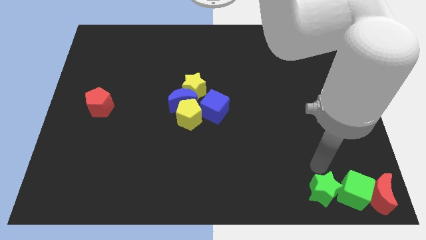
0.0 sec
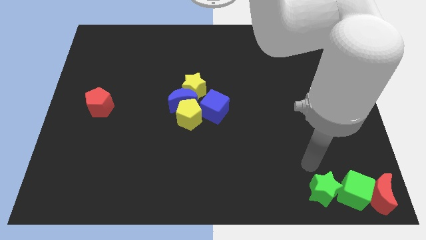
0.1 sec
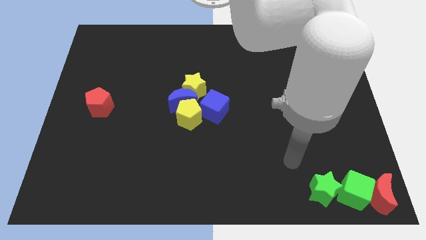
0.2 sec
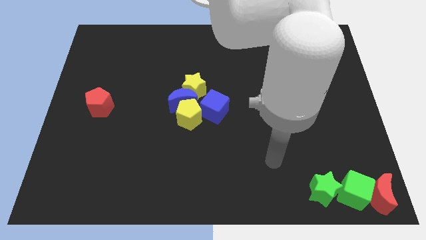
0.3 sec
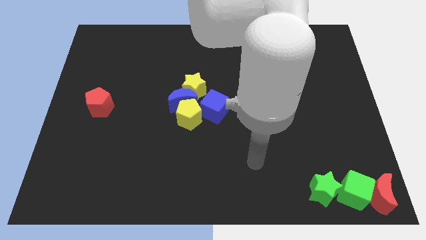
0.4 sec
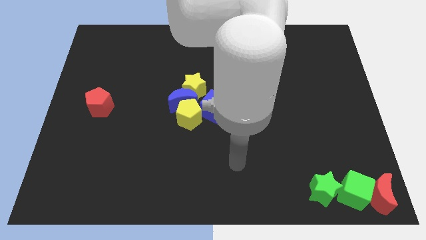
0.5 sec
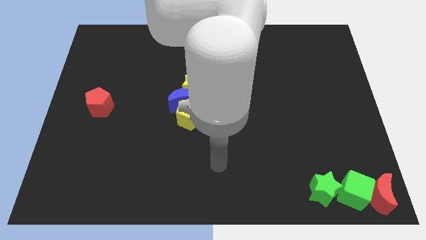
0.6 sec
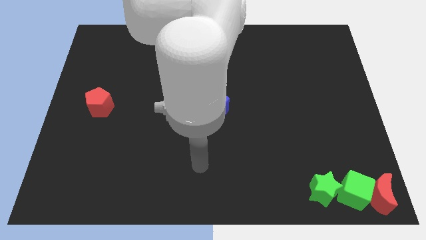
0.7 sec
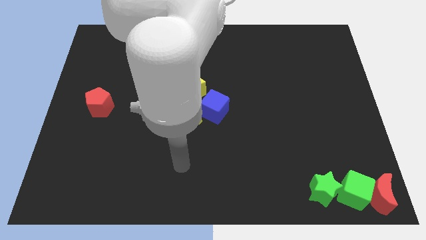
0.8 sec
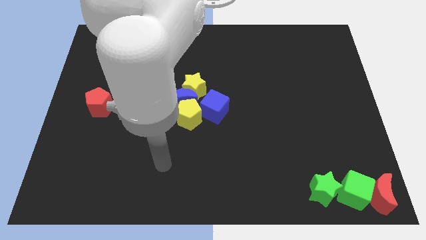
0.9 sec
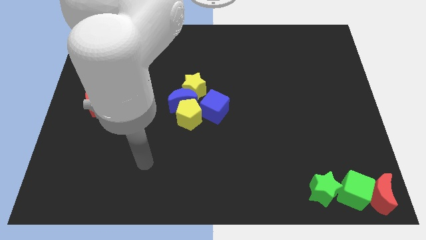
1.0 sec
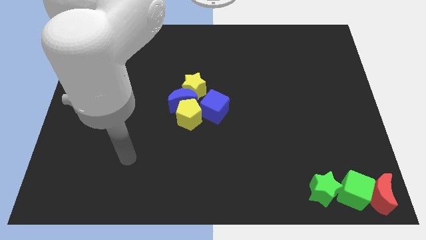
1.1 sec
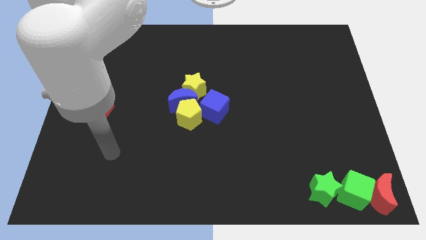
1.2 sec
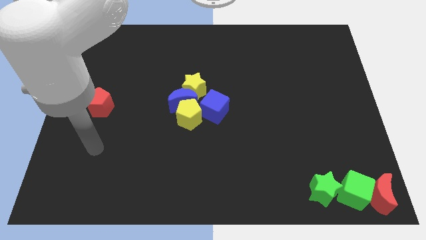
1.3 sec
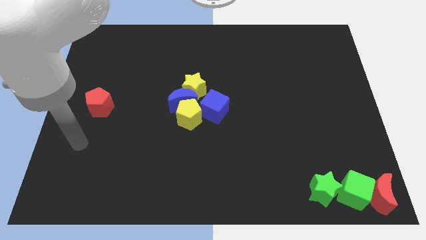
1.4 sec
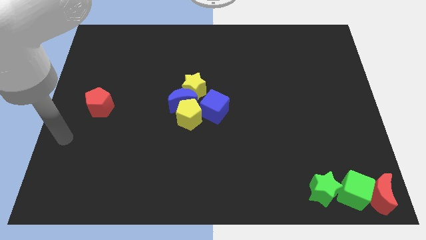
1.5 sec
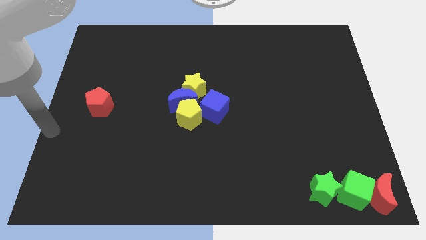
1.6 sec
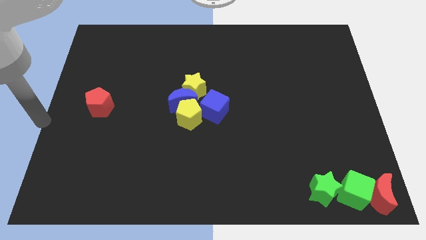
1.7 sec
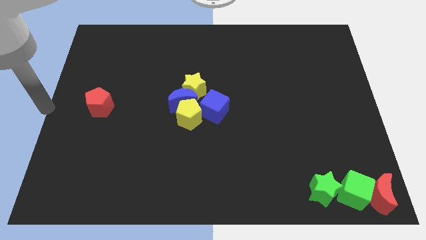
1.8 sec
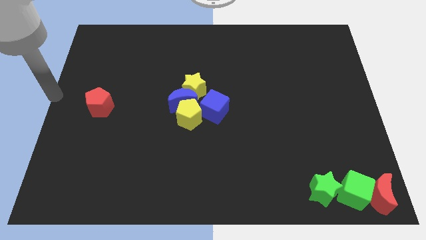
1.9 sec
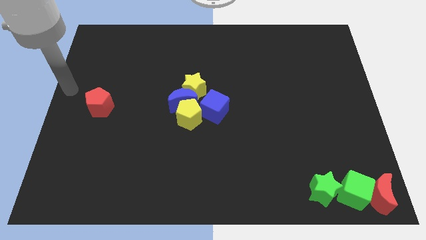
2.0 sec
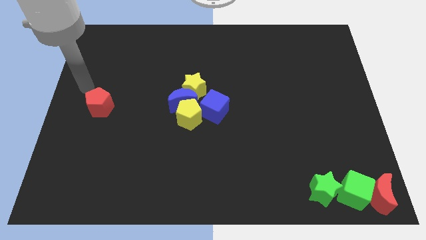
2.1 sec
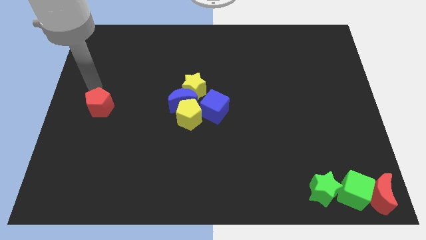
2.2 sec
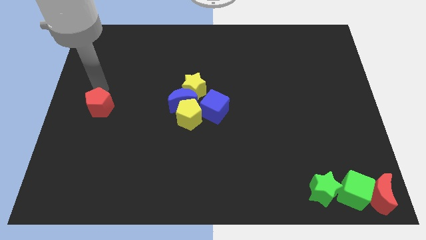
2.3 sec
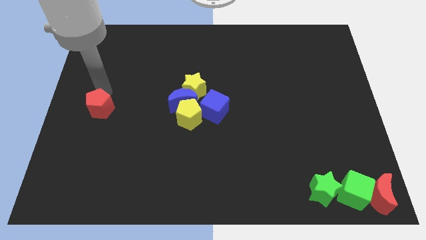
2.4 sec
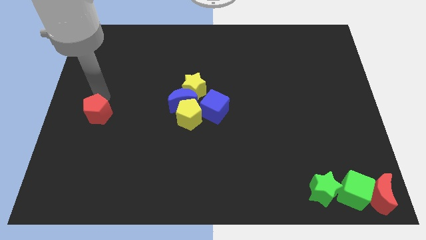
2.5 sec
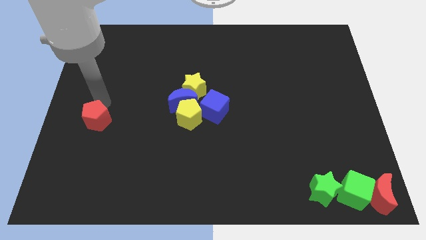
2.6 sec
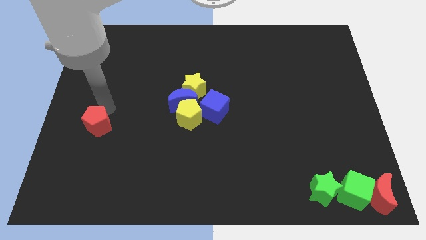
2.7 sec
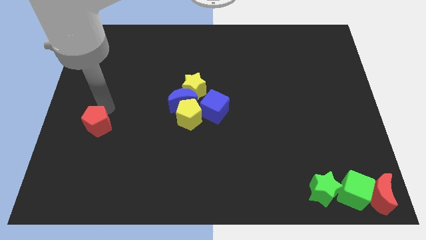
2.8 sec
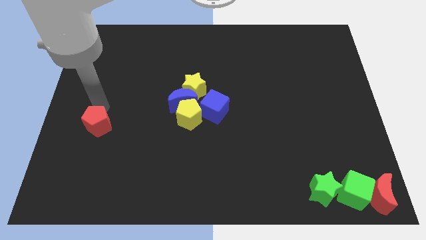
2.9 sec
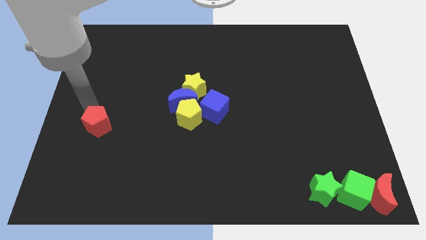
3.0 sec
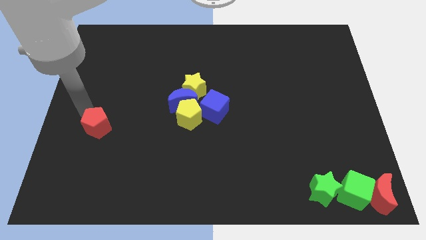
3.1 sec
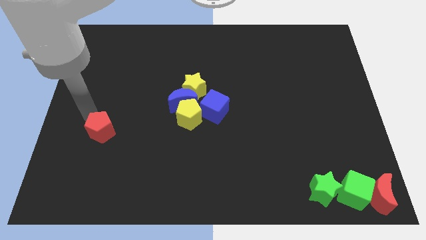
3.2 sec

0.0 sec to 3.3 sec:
push the red pentagon to the left of the yellow pentagon

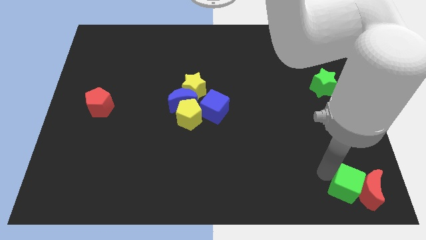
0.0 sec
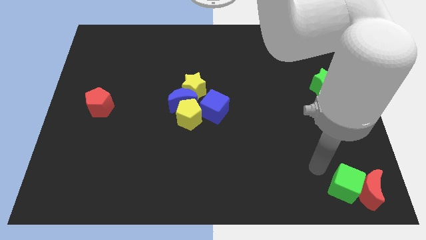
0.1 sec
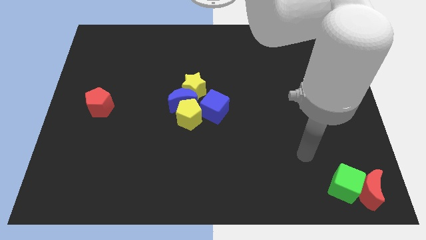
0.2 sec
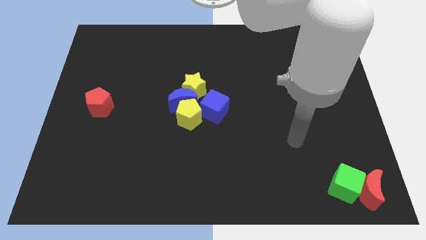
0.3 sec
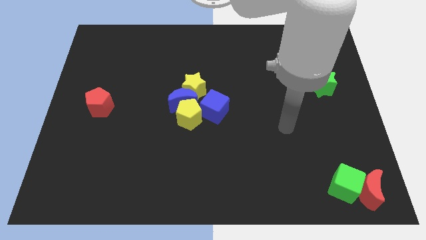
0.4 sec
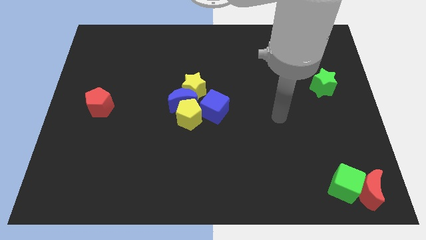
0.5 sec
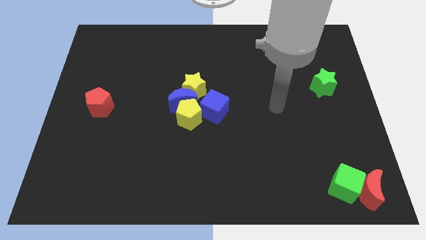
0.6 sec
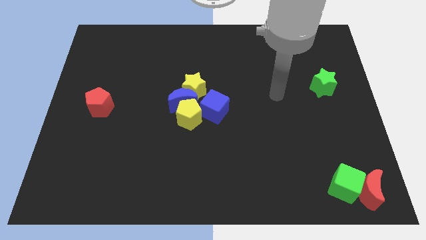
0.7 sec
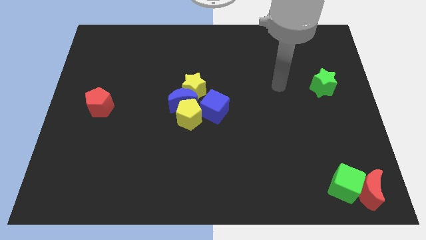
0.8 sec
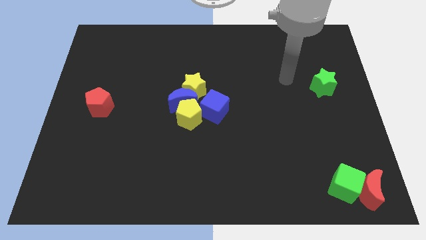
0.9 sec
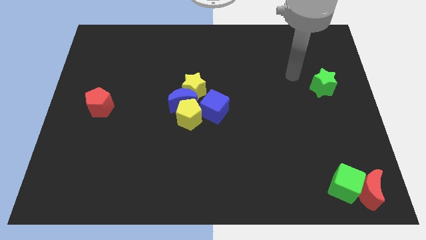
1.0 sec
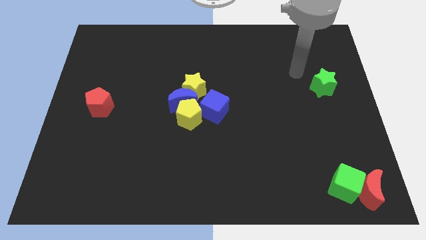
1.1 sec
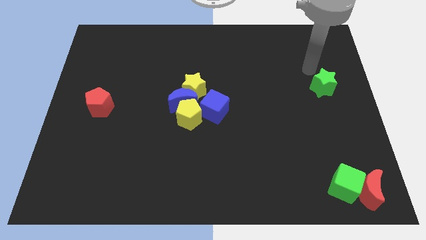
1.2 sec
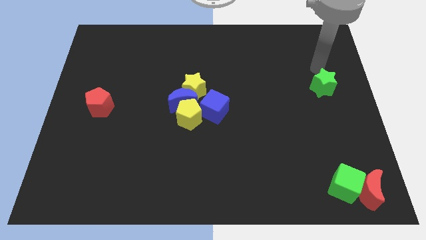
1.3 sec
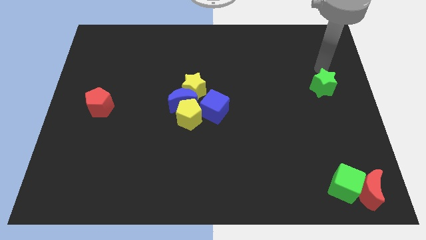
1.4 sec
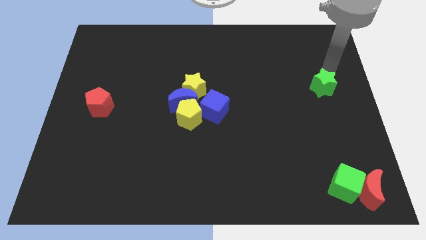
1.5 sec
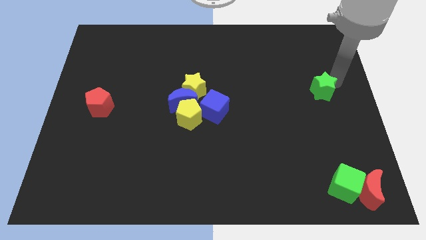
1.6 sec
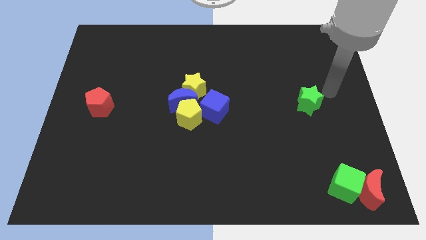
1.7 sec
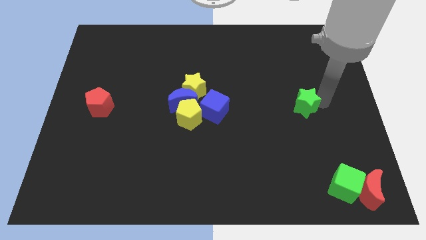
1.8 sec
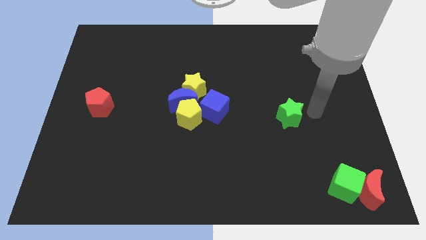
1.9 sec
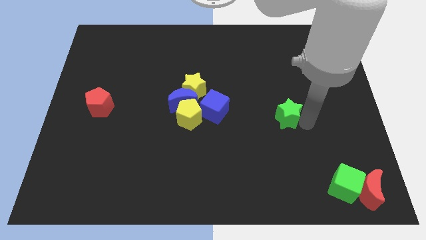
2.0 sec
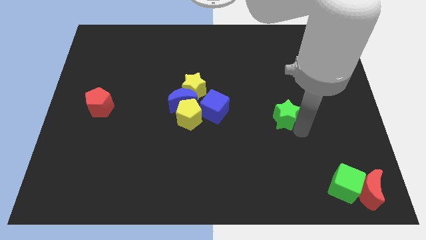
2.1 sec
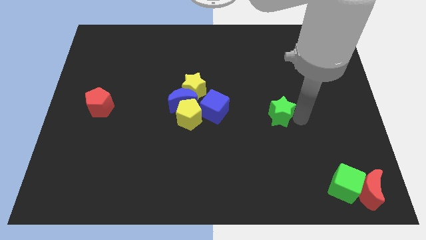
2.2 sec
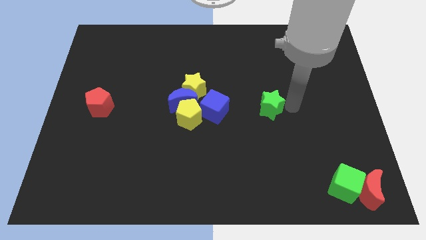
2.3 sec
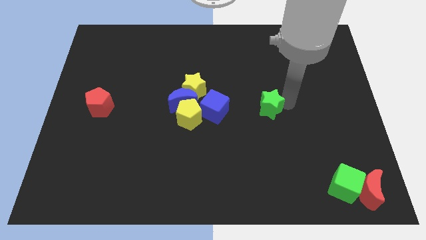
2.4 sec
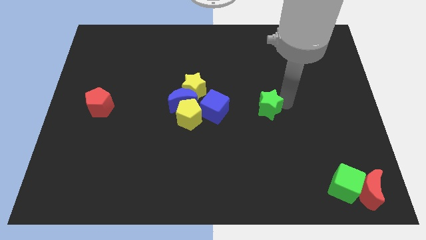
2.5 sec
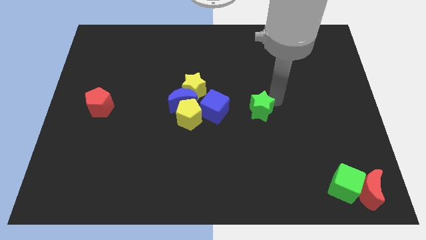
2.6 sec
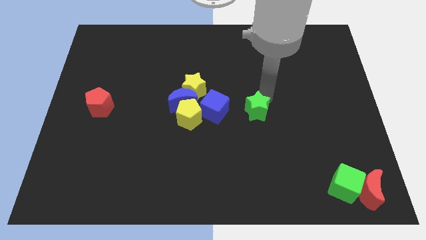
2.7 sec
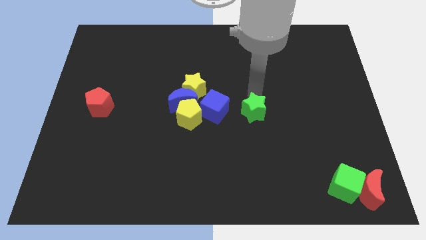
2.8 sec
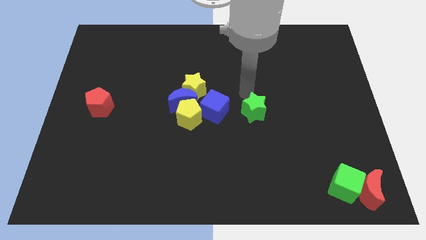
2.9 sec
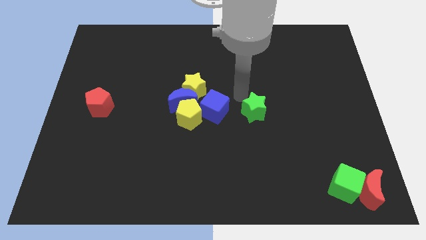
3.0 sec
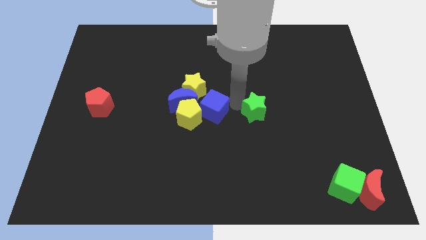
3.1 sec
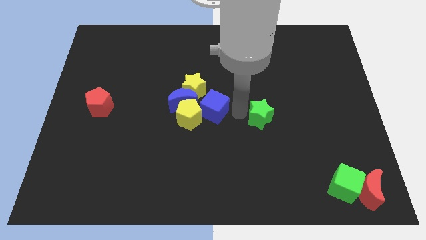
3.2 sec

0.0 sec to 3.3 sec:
move the green star to the right of the blue cube

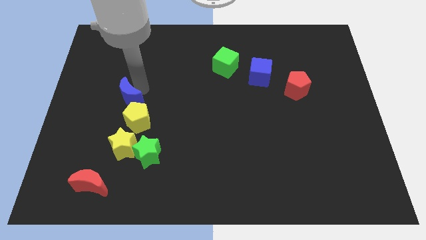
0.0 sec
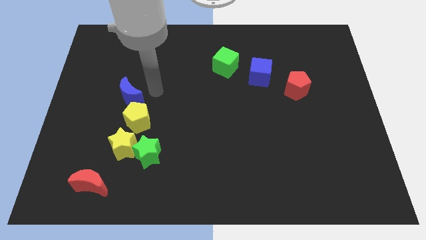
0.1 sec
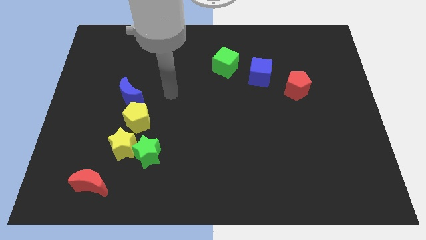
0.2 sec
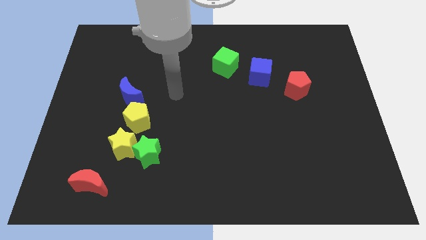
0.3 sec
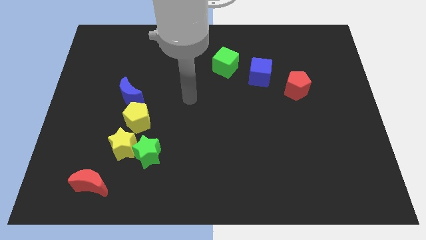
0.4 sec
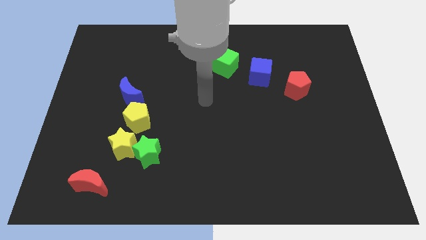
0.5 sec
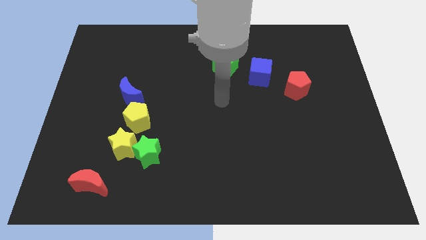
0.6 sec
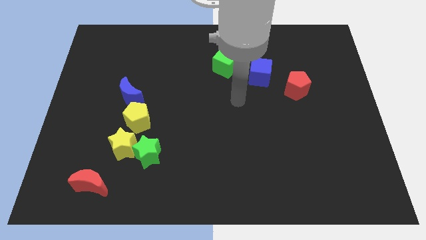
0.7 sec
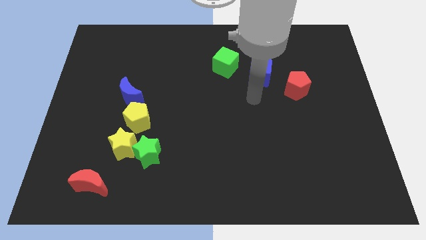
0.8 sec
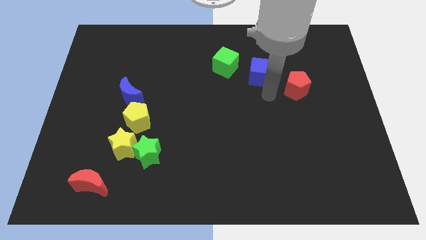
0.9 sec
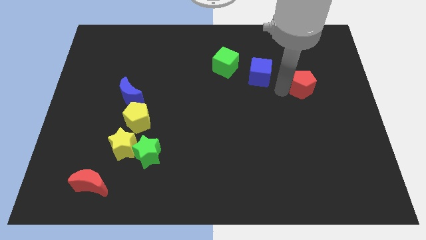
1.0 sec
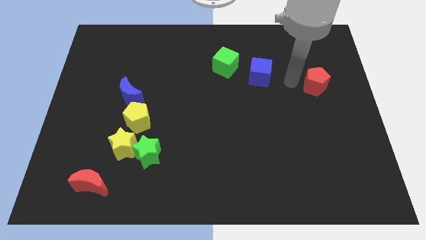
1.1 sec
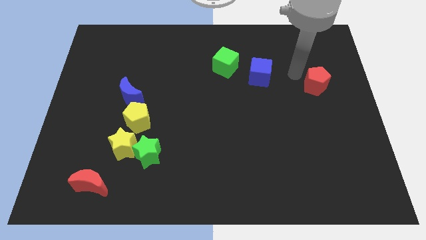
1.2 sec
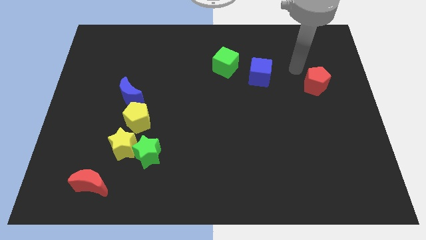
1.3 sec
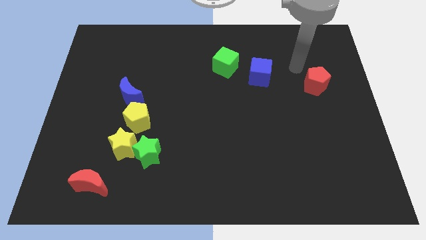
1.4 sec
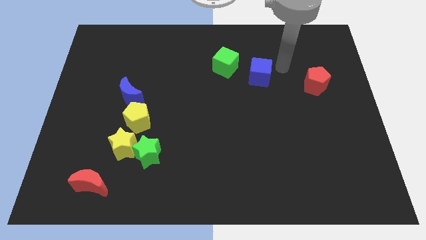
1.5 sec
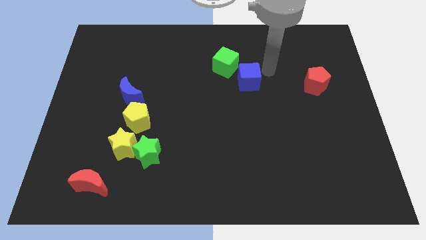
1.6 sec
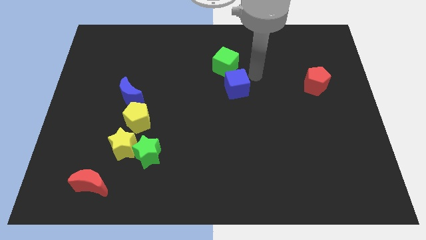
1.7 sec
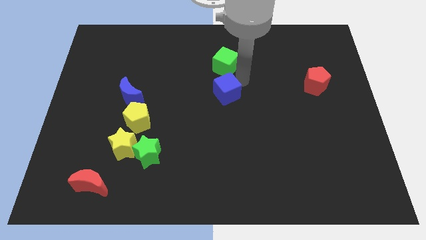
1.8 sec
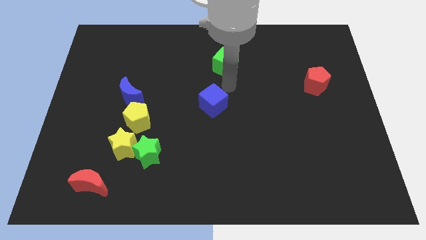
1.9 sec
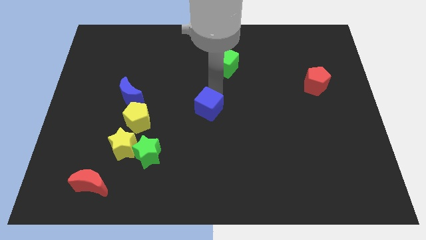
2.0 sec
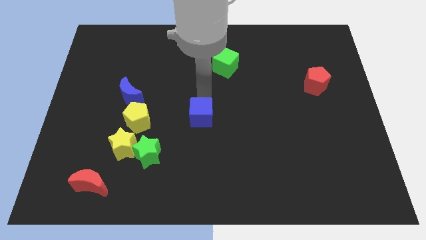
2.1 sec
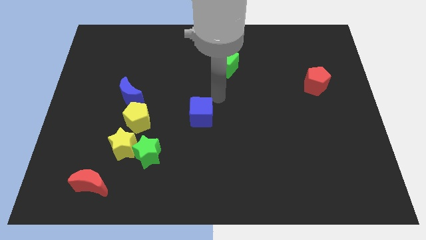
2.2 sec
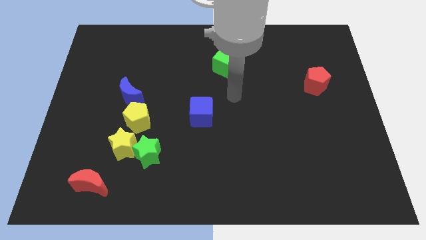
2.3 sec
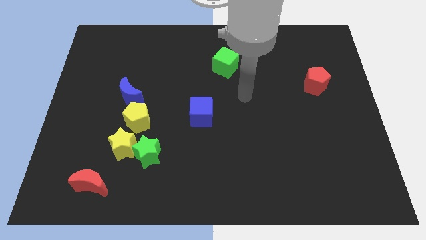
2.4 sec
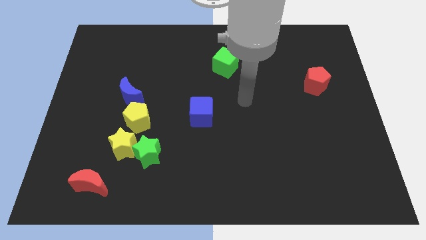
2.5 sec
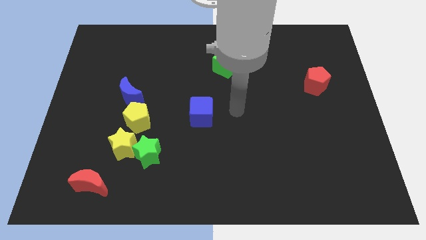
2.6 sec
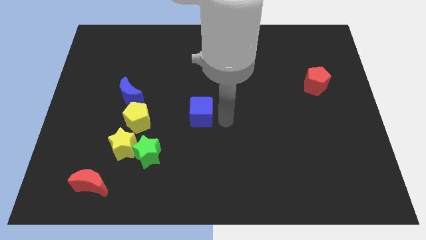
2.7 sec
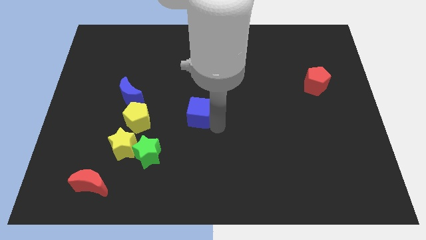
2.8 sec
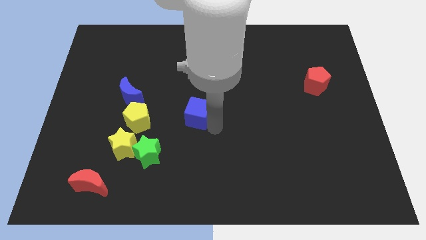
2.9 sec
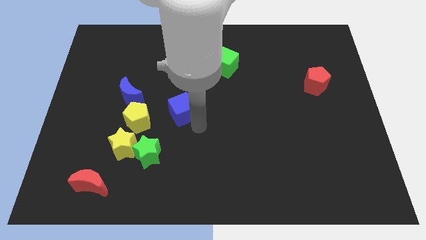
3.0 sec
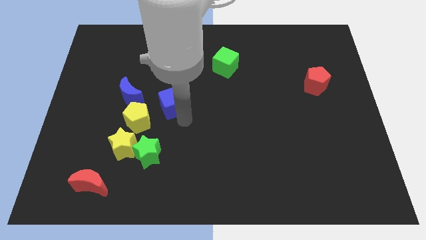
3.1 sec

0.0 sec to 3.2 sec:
move the blue cube towards the yellow pentagon
